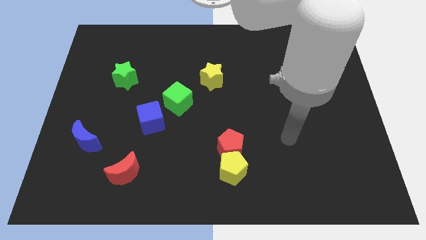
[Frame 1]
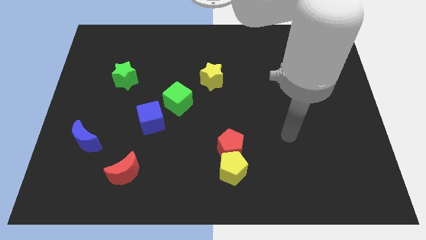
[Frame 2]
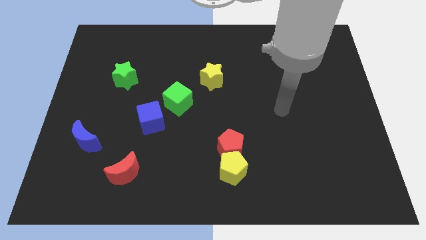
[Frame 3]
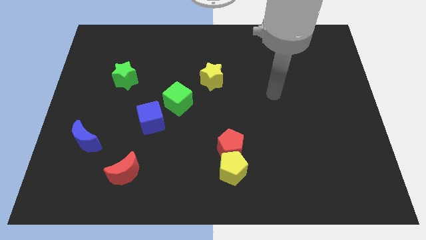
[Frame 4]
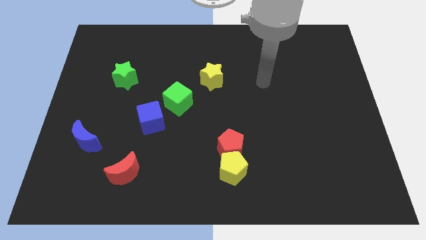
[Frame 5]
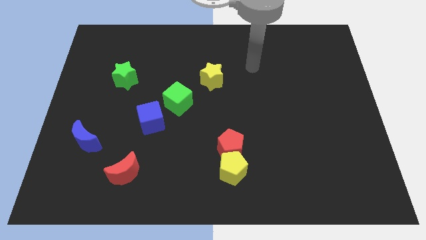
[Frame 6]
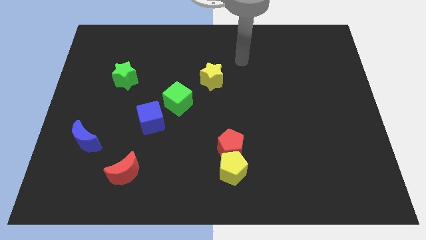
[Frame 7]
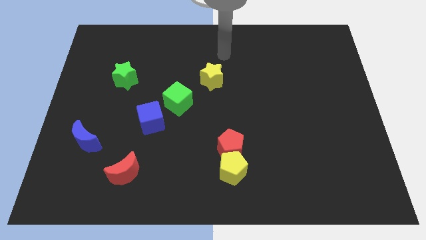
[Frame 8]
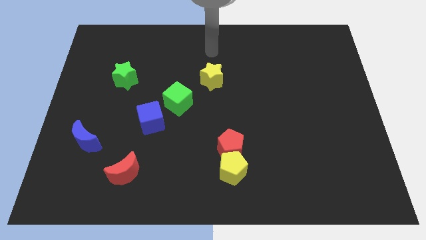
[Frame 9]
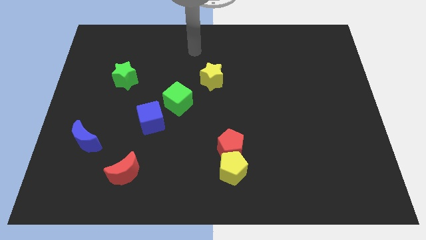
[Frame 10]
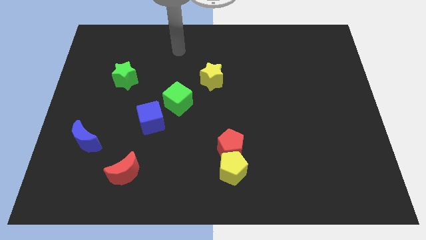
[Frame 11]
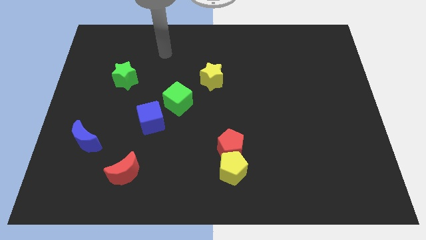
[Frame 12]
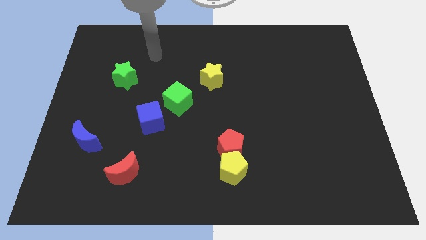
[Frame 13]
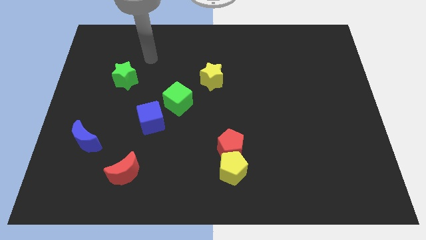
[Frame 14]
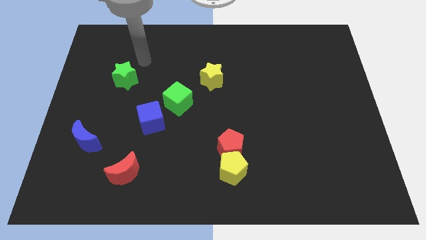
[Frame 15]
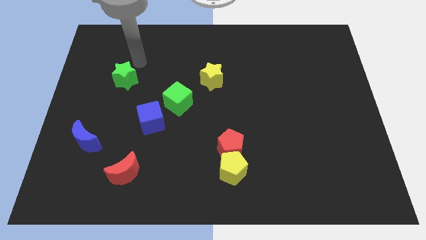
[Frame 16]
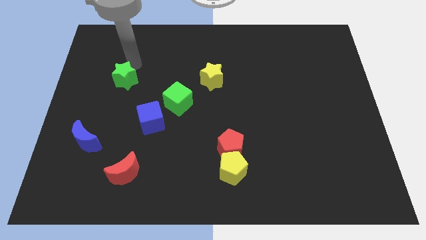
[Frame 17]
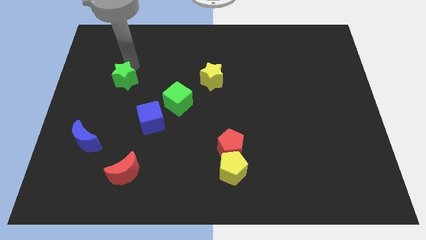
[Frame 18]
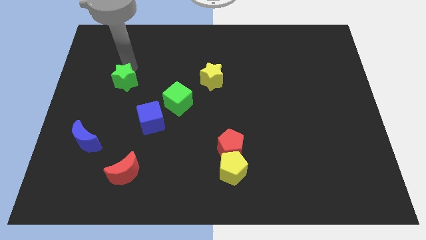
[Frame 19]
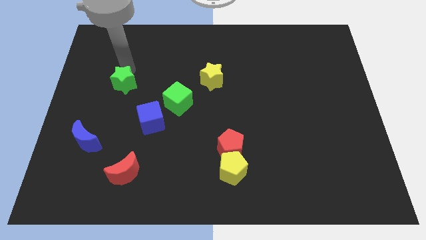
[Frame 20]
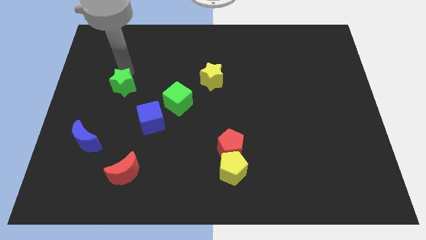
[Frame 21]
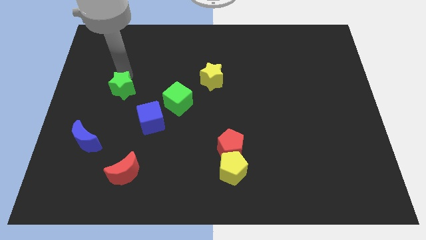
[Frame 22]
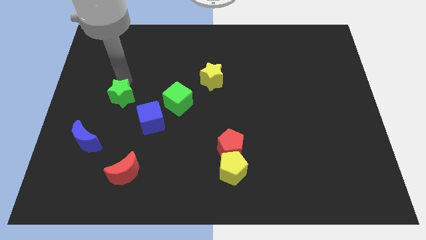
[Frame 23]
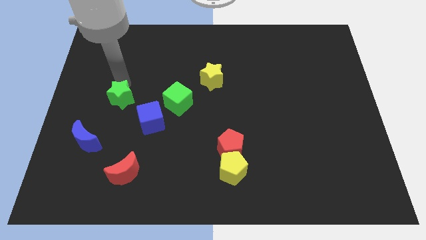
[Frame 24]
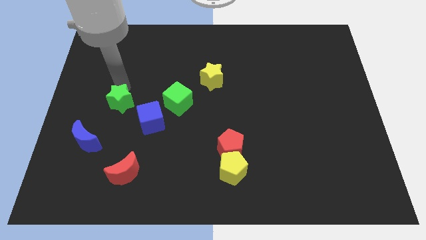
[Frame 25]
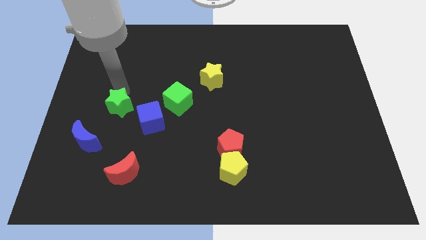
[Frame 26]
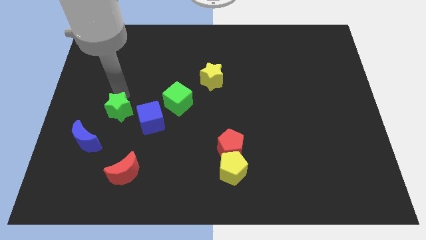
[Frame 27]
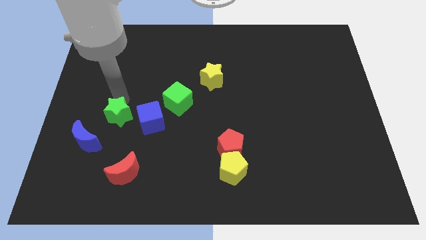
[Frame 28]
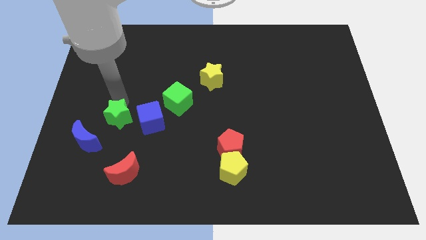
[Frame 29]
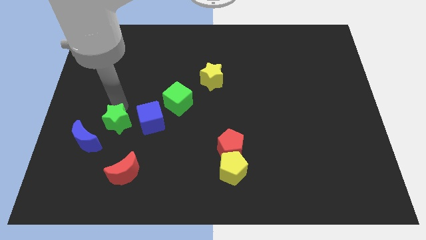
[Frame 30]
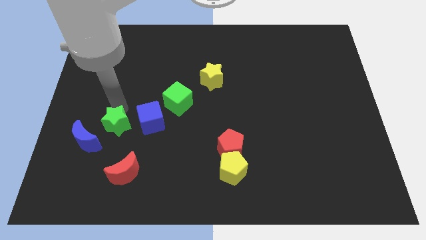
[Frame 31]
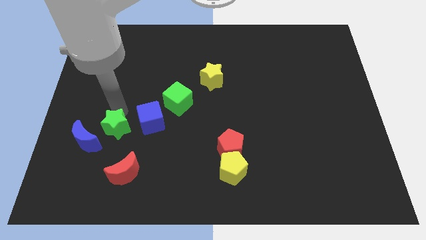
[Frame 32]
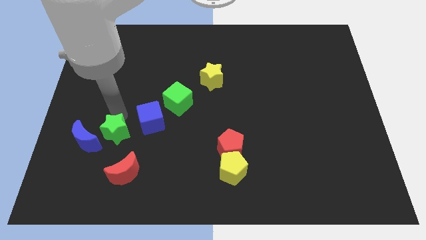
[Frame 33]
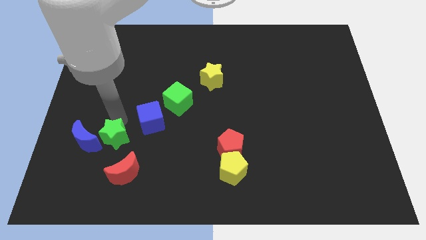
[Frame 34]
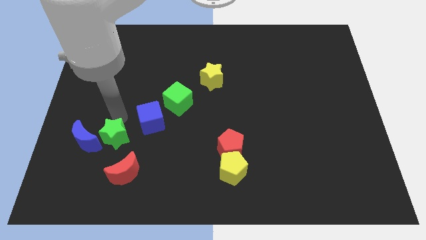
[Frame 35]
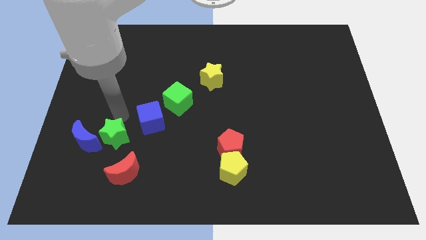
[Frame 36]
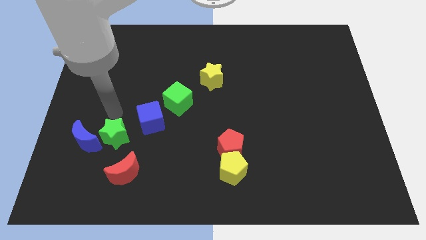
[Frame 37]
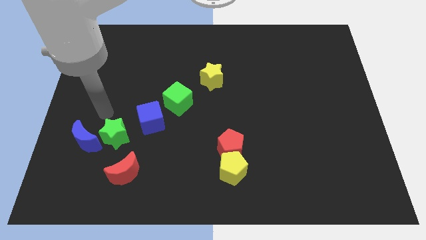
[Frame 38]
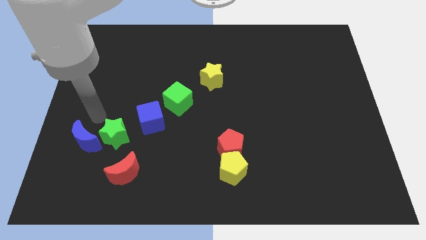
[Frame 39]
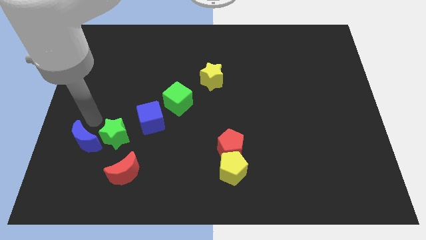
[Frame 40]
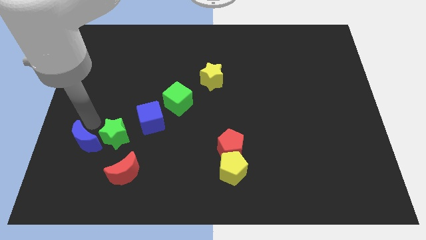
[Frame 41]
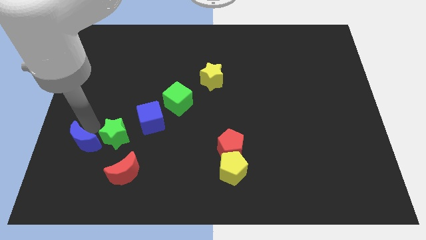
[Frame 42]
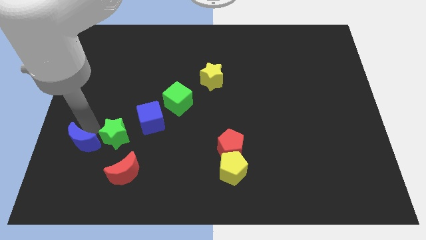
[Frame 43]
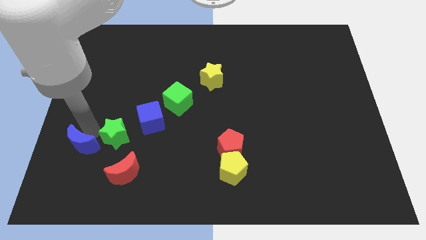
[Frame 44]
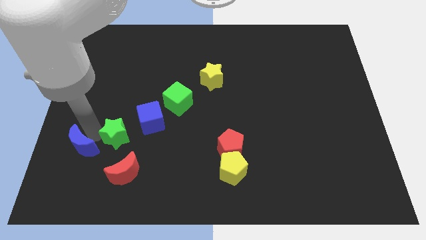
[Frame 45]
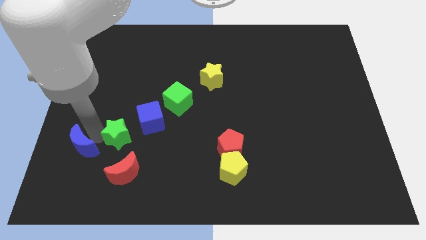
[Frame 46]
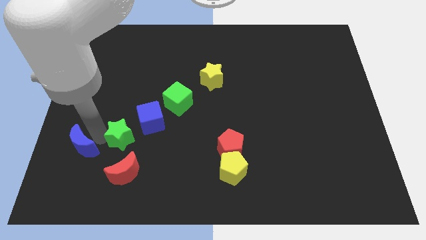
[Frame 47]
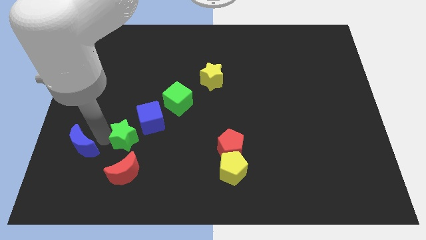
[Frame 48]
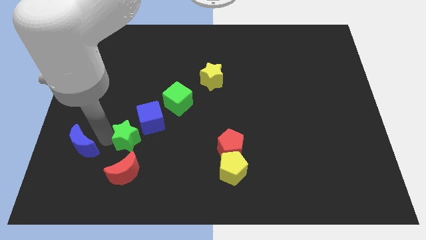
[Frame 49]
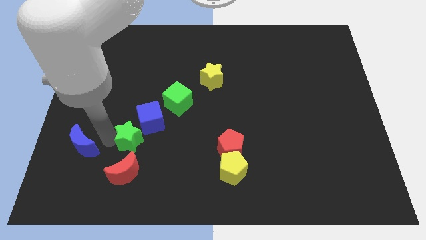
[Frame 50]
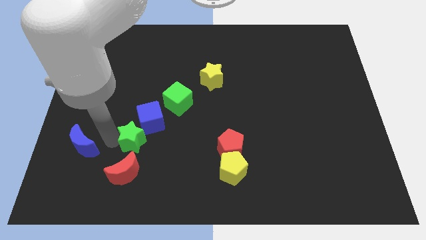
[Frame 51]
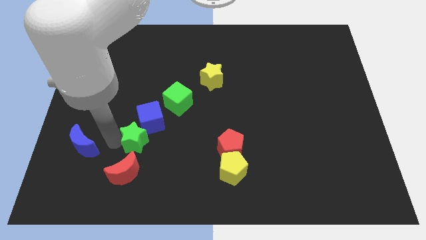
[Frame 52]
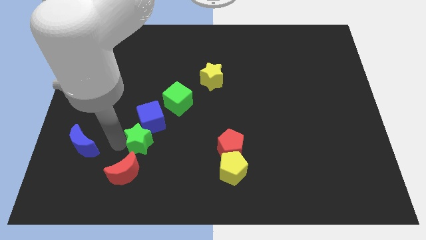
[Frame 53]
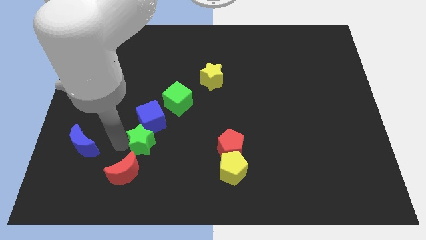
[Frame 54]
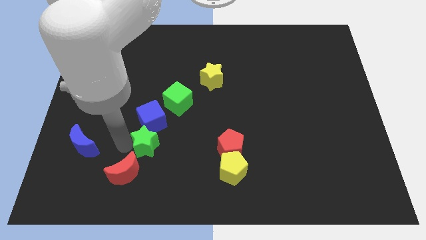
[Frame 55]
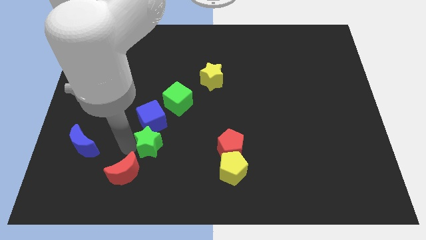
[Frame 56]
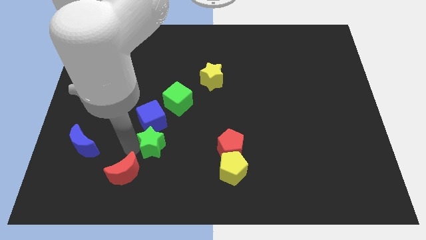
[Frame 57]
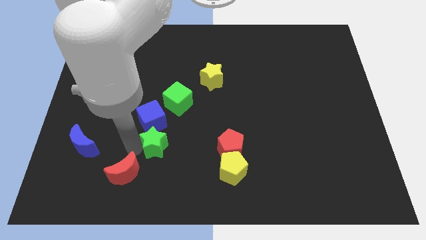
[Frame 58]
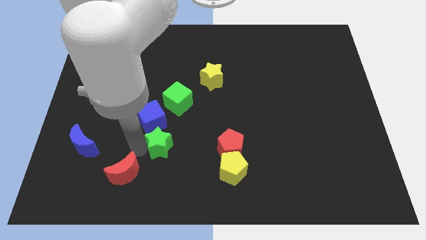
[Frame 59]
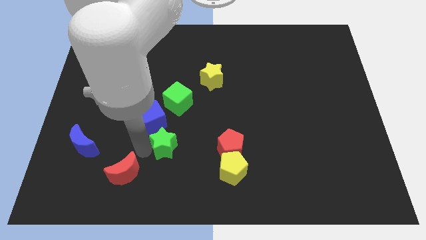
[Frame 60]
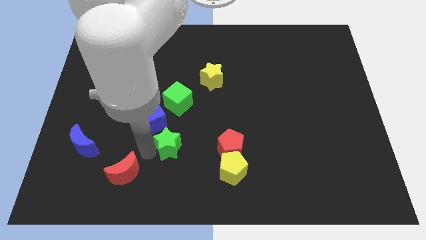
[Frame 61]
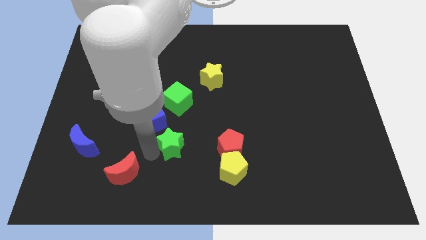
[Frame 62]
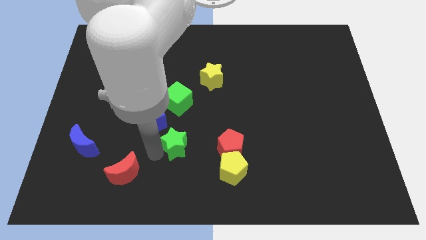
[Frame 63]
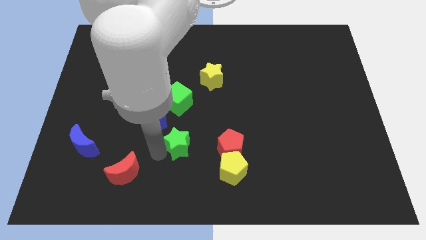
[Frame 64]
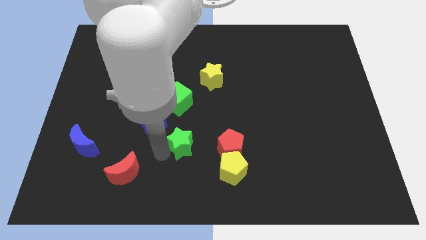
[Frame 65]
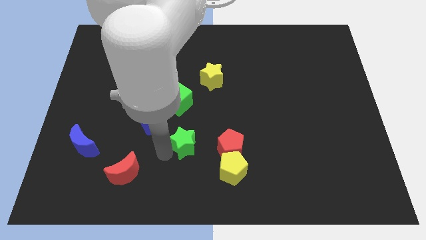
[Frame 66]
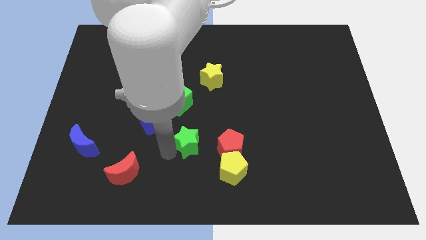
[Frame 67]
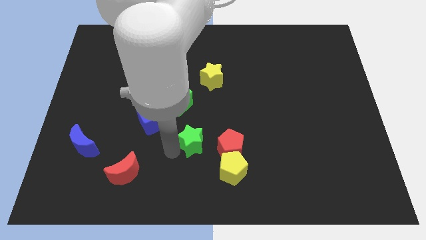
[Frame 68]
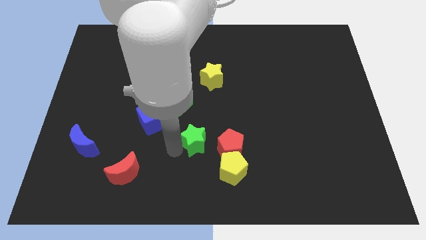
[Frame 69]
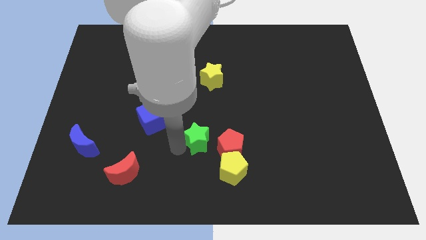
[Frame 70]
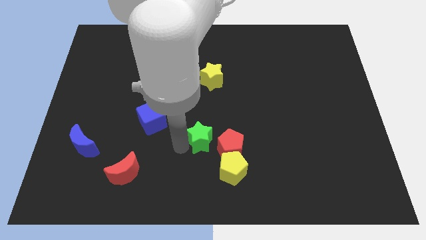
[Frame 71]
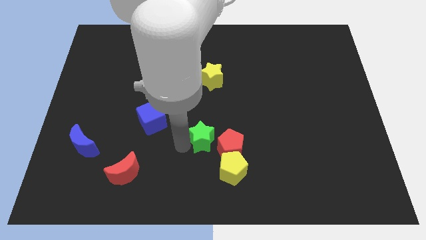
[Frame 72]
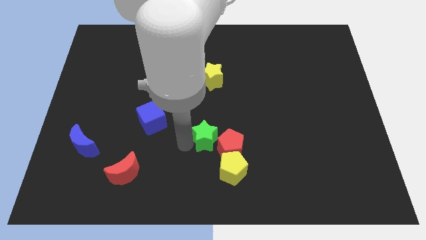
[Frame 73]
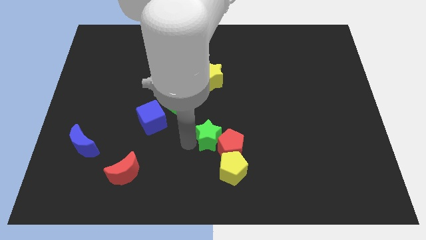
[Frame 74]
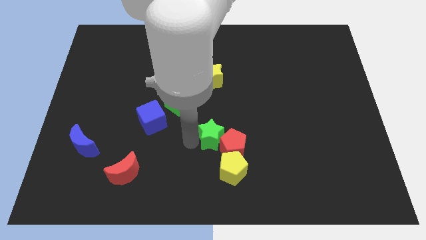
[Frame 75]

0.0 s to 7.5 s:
move the green star to the red pentagon

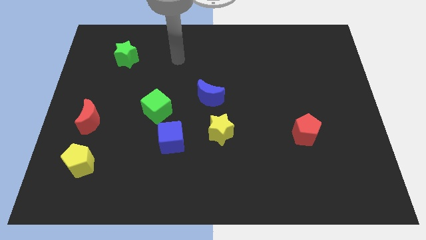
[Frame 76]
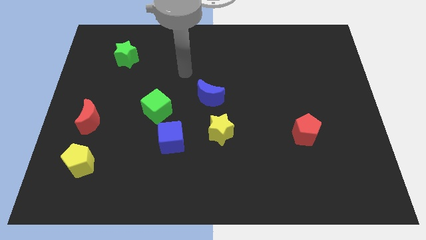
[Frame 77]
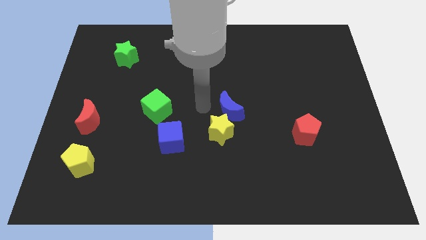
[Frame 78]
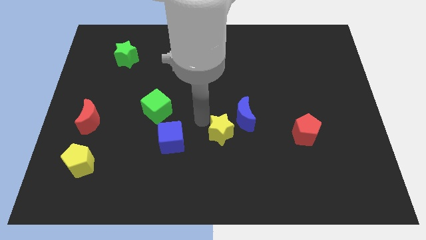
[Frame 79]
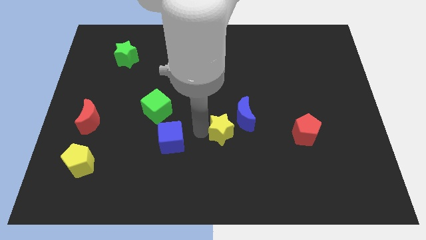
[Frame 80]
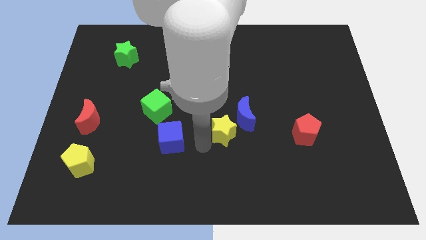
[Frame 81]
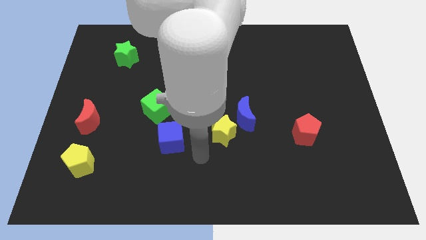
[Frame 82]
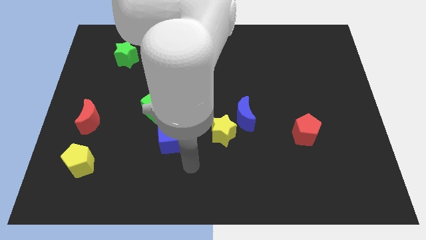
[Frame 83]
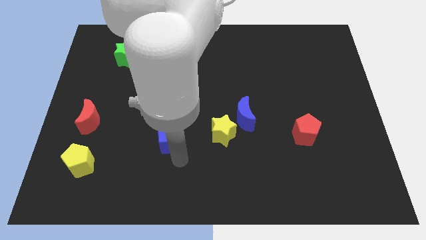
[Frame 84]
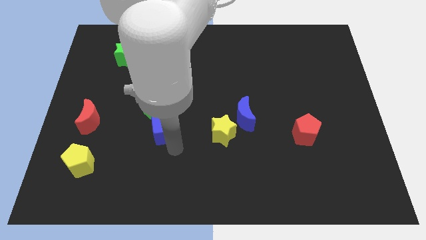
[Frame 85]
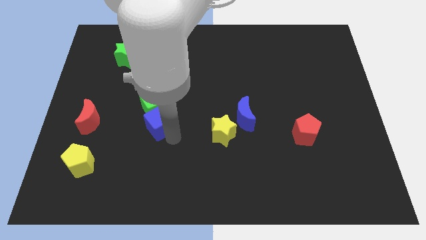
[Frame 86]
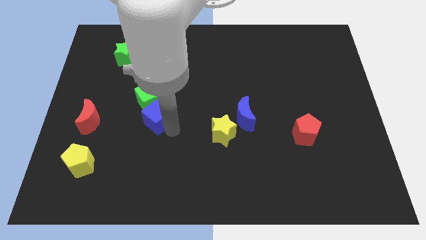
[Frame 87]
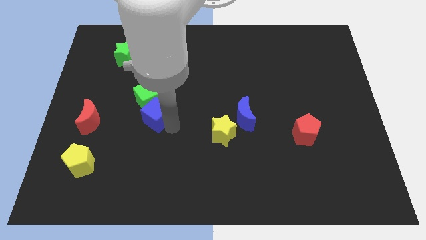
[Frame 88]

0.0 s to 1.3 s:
move the blue cube close to the green cube
